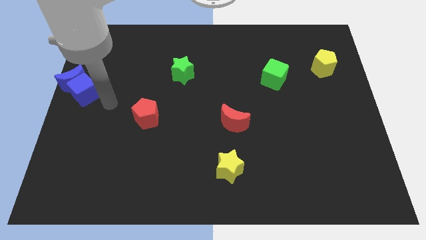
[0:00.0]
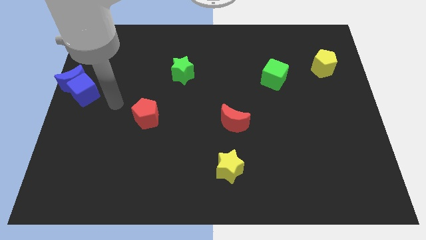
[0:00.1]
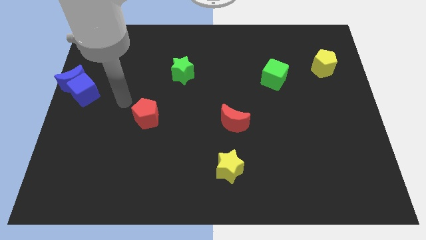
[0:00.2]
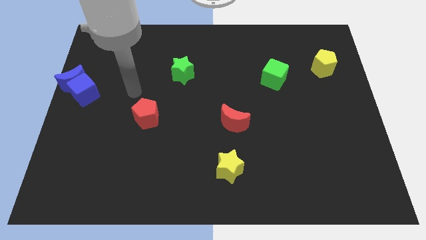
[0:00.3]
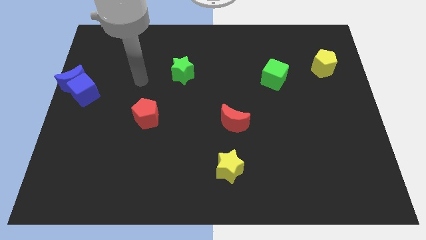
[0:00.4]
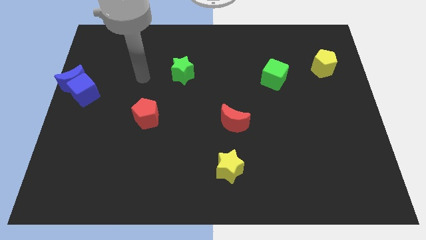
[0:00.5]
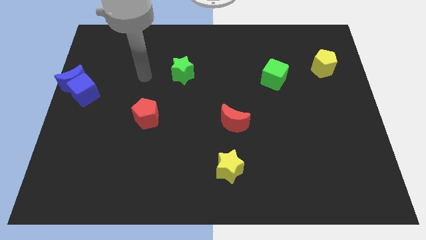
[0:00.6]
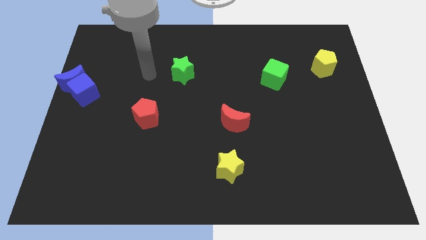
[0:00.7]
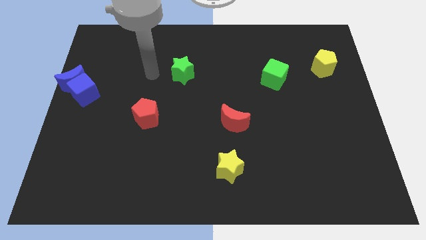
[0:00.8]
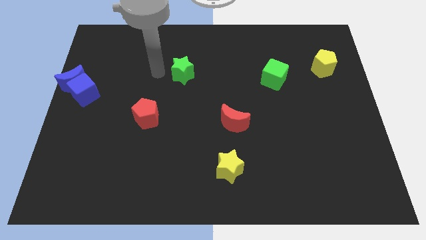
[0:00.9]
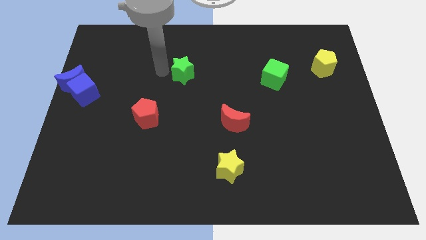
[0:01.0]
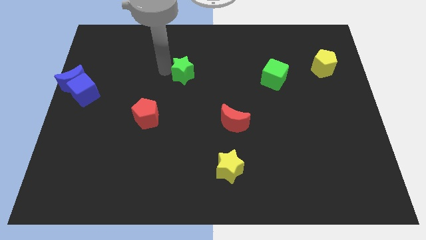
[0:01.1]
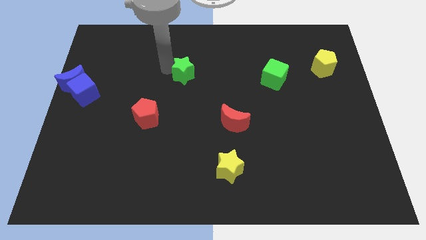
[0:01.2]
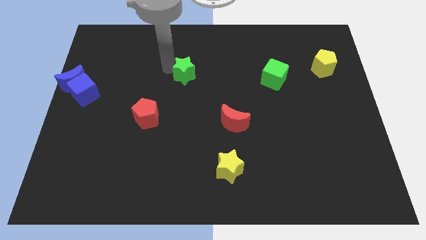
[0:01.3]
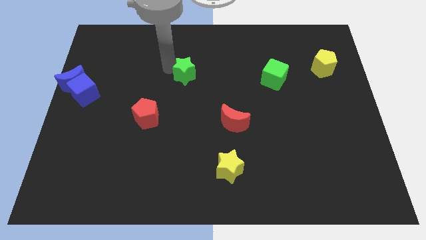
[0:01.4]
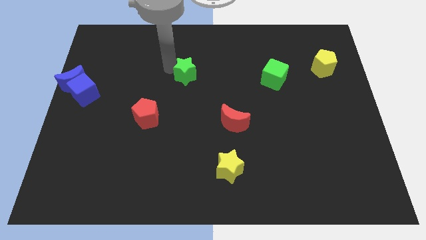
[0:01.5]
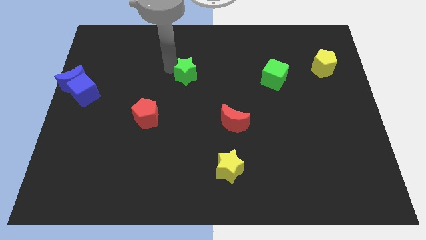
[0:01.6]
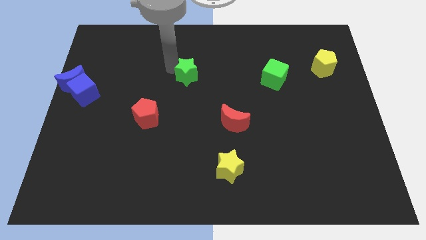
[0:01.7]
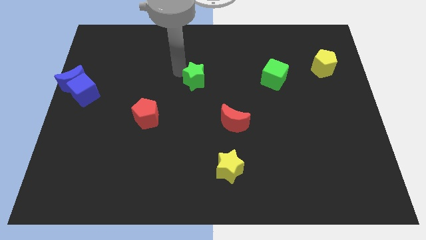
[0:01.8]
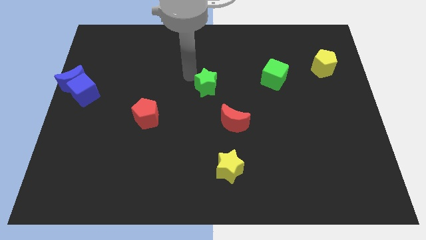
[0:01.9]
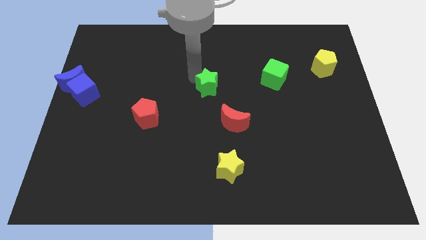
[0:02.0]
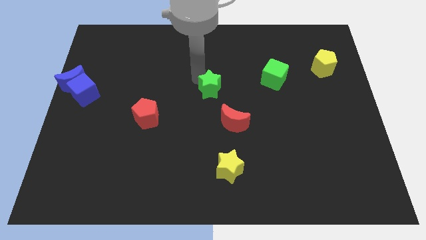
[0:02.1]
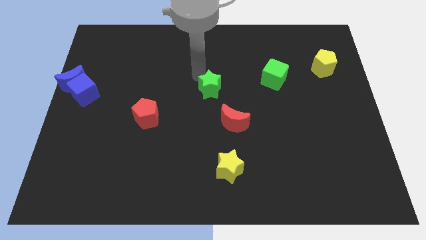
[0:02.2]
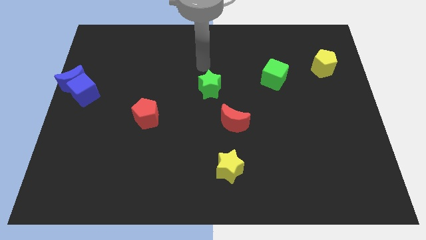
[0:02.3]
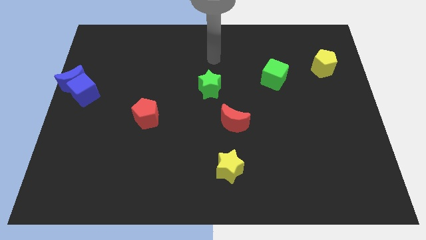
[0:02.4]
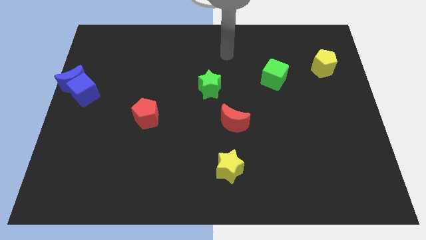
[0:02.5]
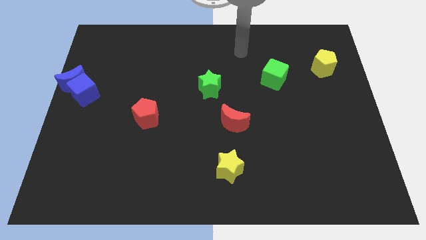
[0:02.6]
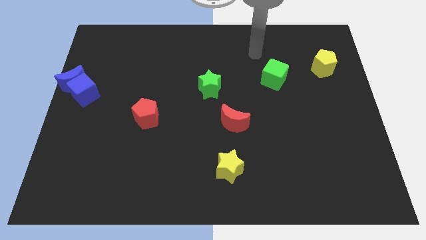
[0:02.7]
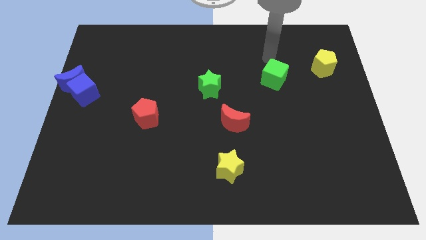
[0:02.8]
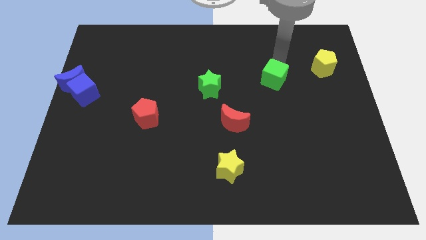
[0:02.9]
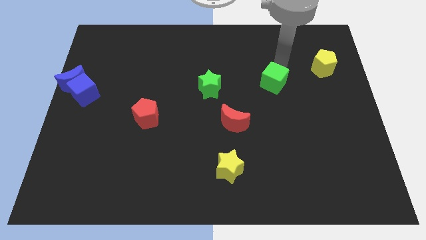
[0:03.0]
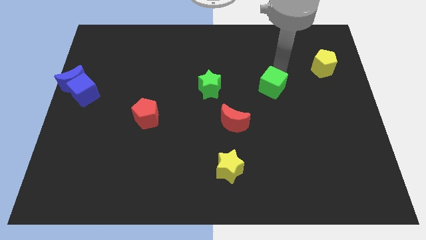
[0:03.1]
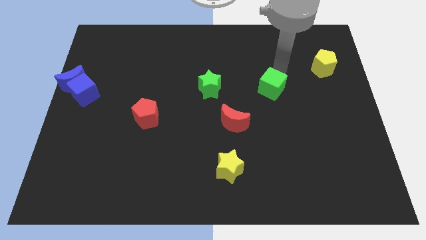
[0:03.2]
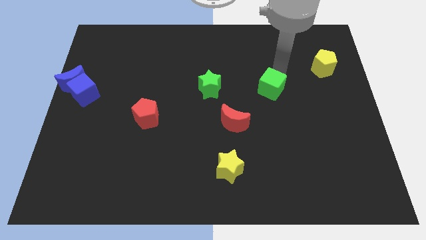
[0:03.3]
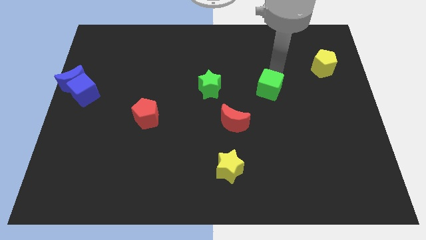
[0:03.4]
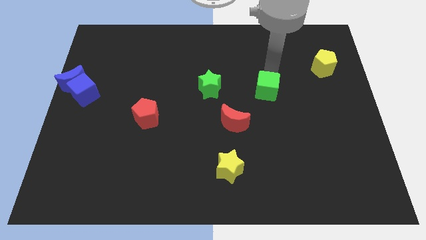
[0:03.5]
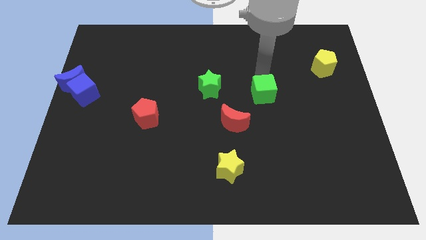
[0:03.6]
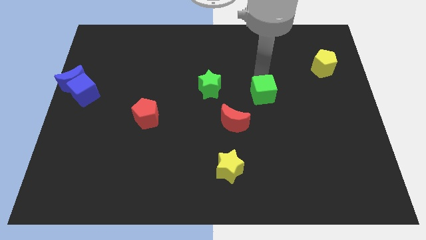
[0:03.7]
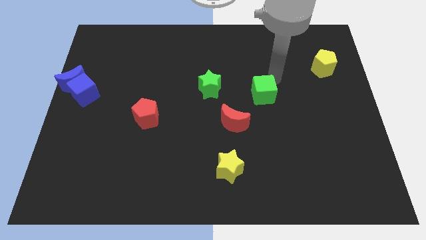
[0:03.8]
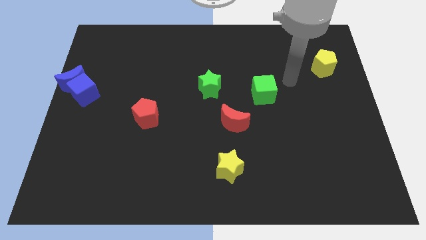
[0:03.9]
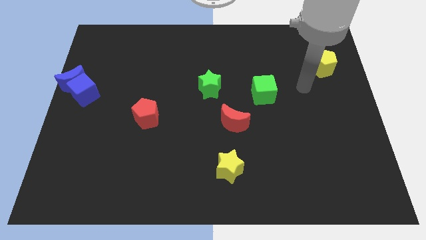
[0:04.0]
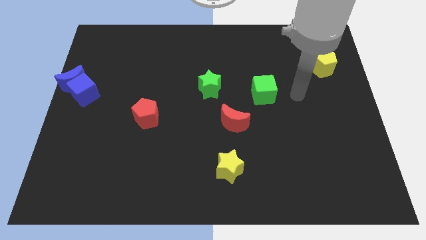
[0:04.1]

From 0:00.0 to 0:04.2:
put green star and green cube parallel to each other

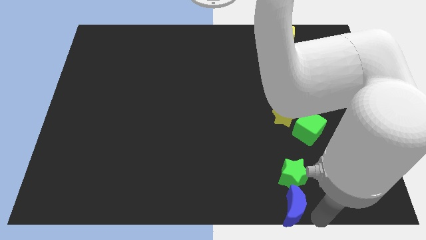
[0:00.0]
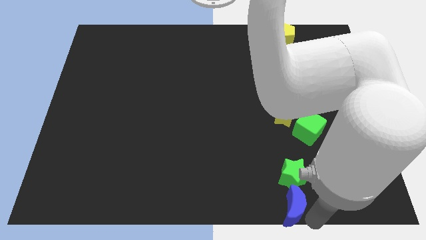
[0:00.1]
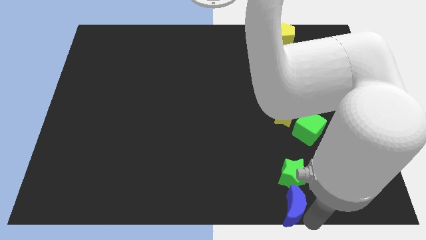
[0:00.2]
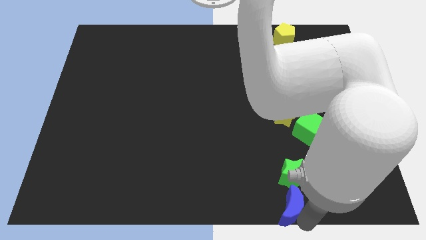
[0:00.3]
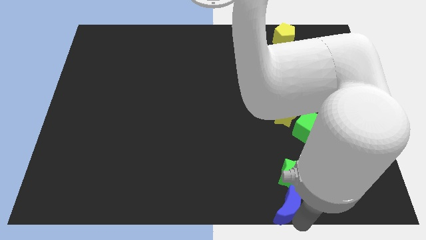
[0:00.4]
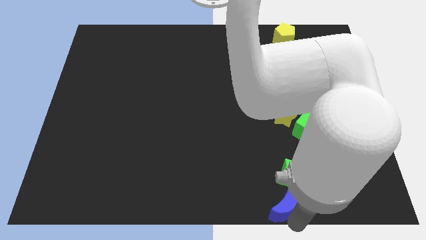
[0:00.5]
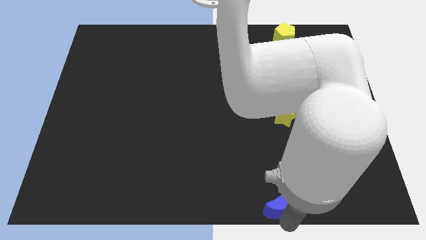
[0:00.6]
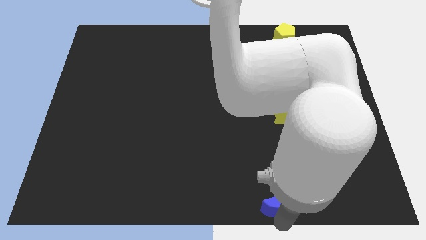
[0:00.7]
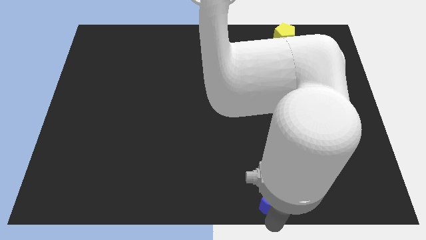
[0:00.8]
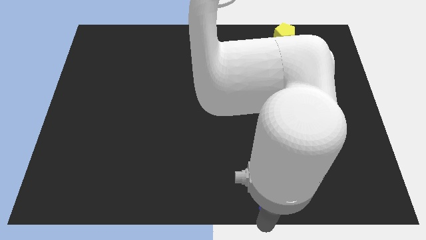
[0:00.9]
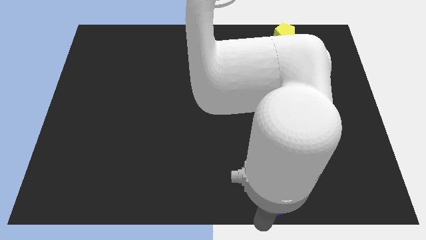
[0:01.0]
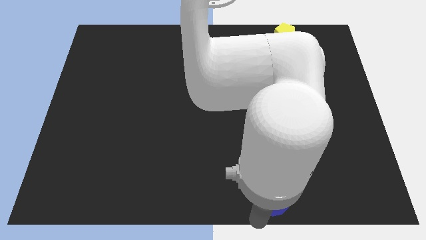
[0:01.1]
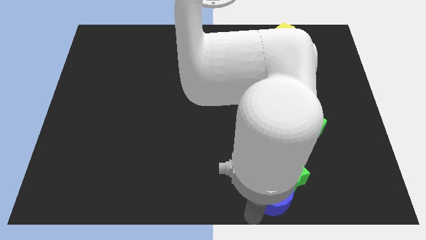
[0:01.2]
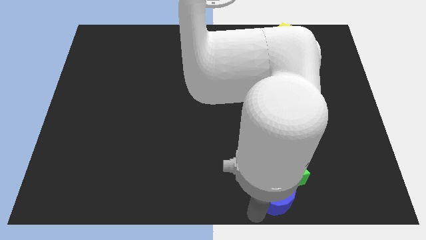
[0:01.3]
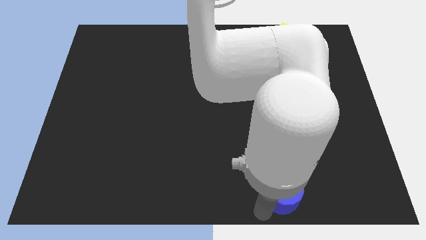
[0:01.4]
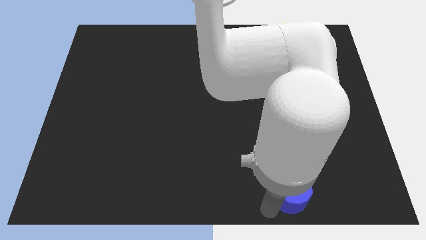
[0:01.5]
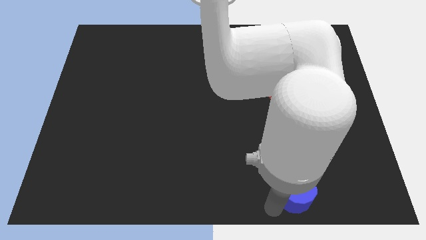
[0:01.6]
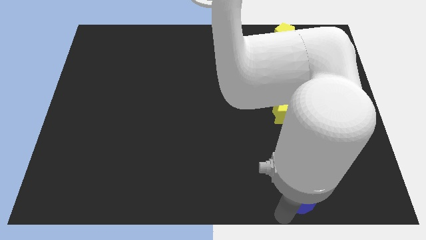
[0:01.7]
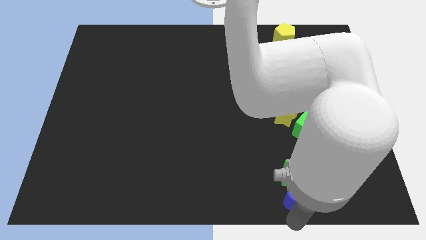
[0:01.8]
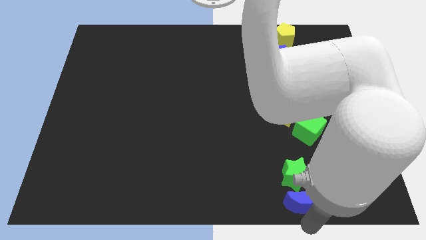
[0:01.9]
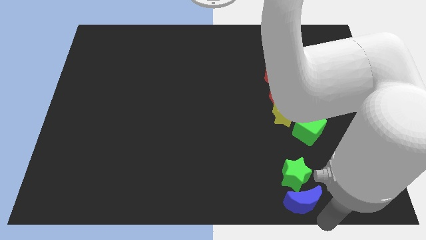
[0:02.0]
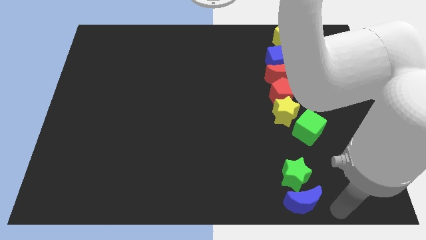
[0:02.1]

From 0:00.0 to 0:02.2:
move the blue moon horizontally

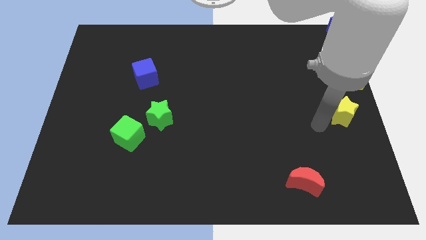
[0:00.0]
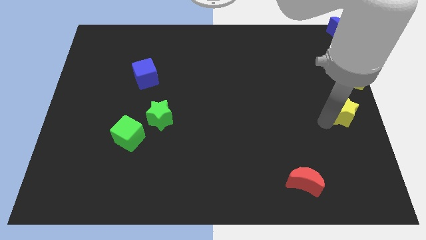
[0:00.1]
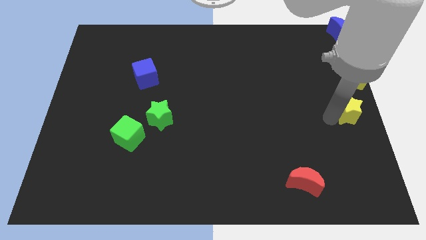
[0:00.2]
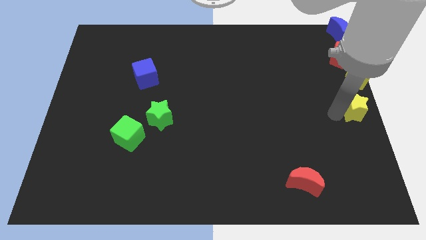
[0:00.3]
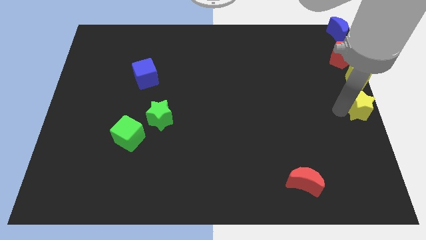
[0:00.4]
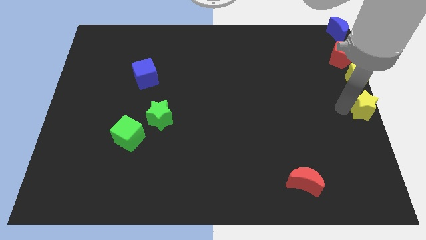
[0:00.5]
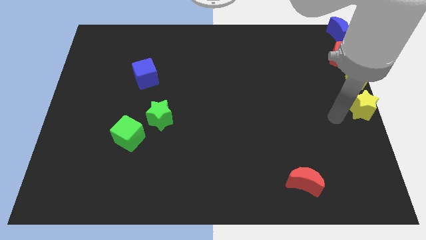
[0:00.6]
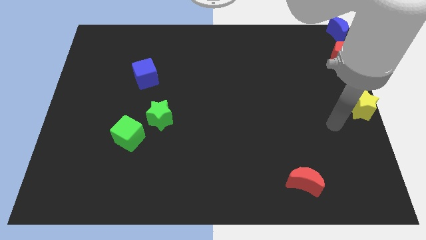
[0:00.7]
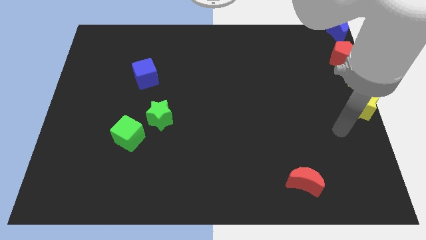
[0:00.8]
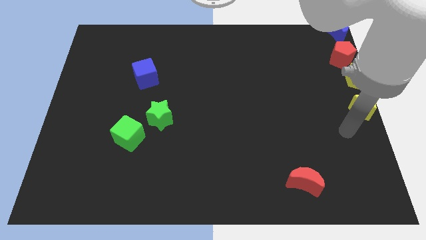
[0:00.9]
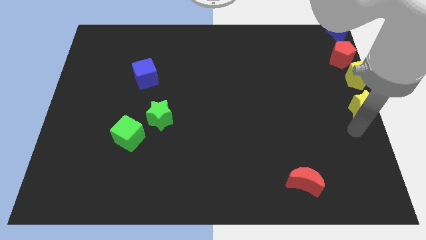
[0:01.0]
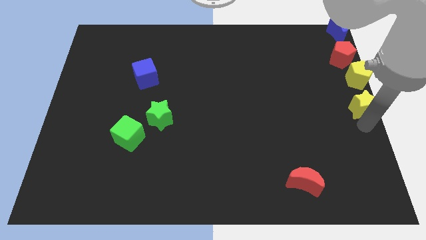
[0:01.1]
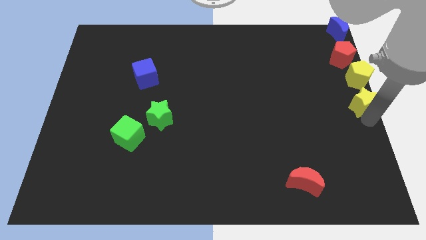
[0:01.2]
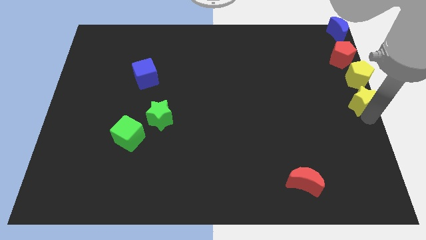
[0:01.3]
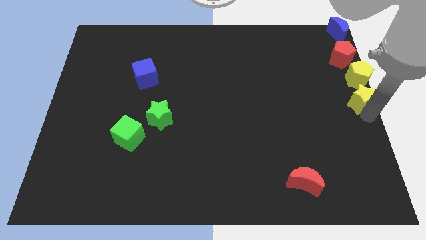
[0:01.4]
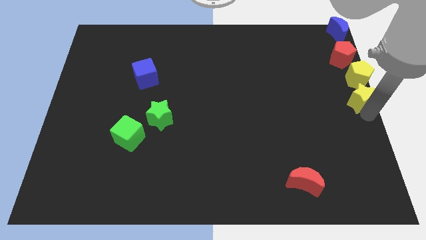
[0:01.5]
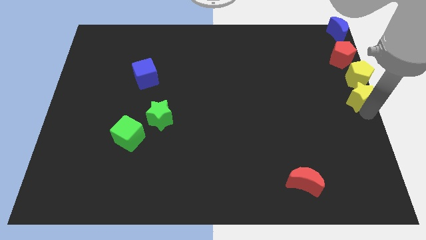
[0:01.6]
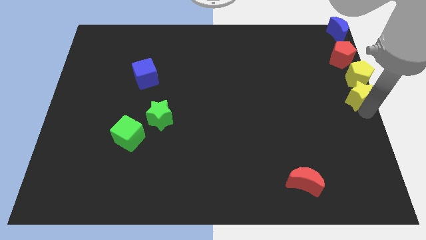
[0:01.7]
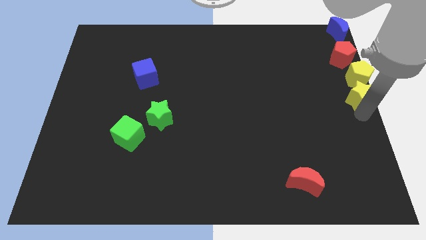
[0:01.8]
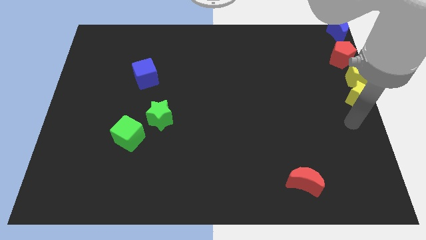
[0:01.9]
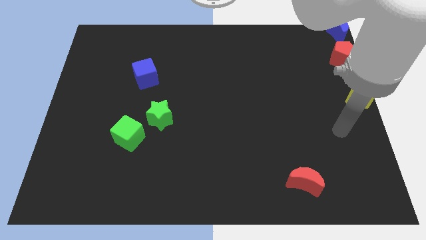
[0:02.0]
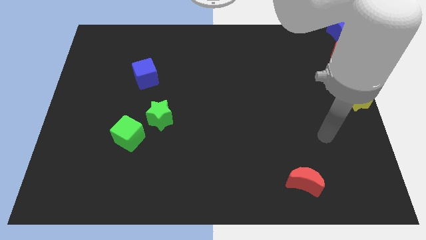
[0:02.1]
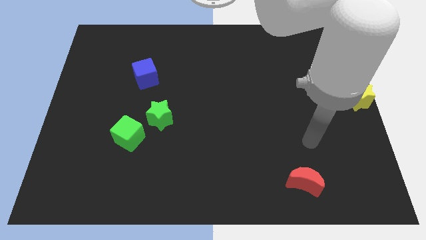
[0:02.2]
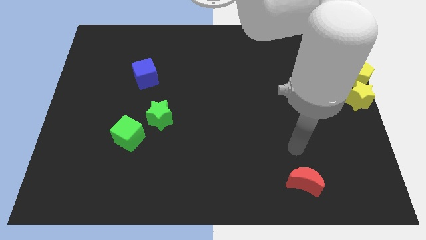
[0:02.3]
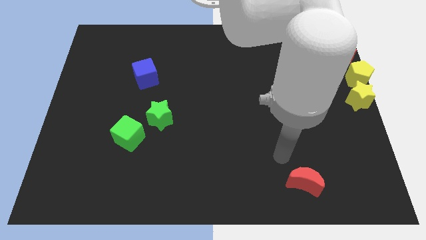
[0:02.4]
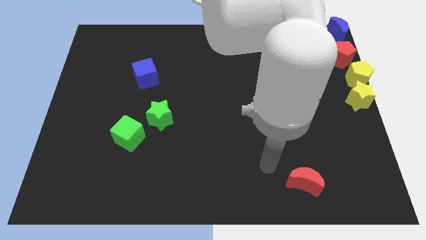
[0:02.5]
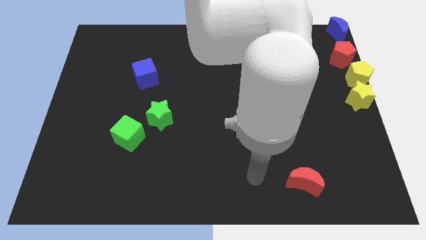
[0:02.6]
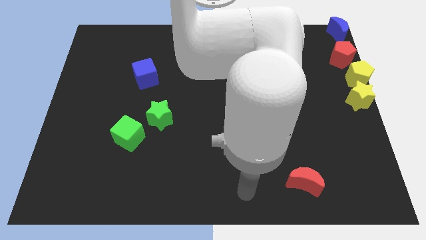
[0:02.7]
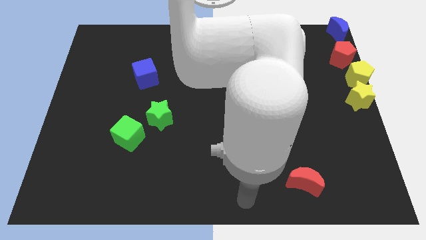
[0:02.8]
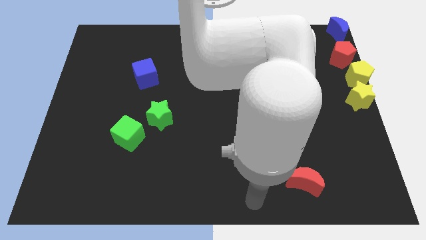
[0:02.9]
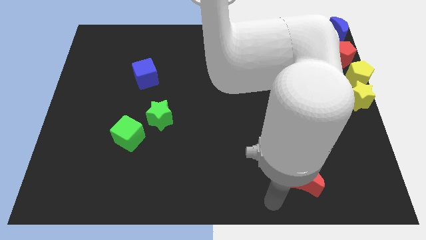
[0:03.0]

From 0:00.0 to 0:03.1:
push the yellow star into the yellow pentagon
